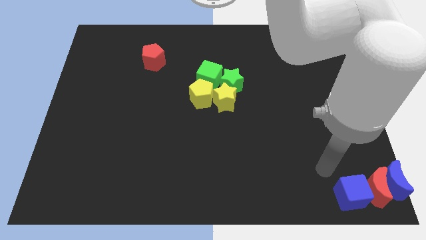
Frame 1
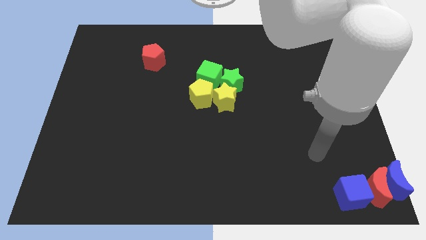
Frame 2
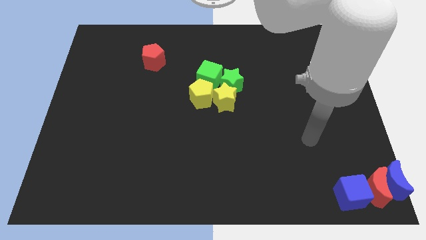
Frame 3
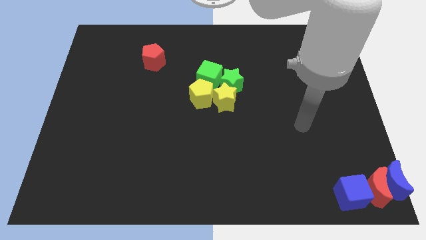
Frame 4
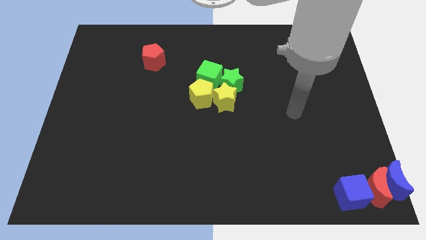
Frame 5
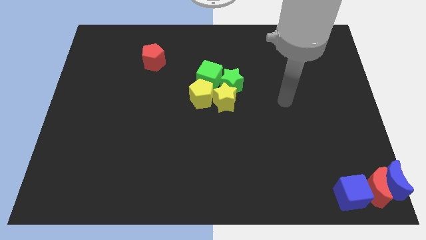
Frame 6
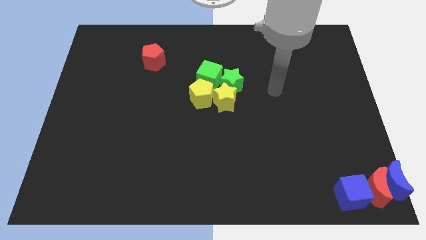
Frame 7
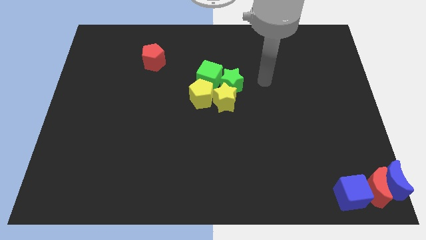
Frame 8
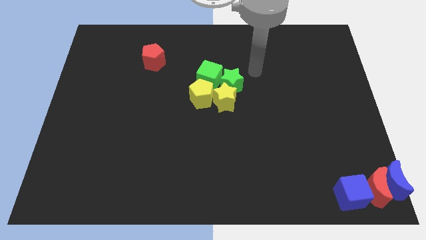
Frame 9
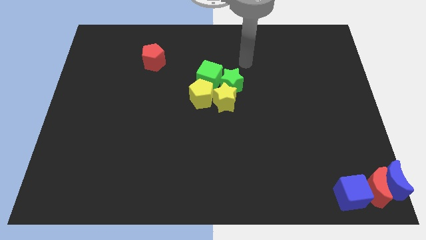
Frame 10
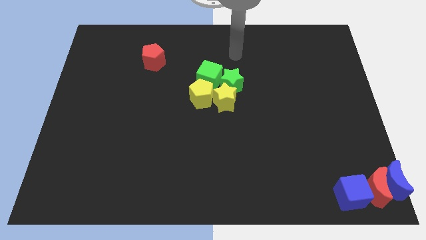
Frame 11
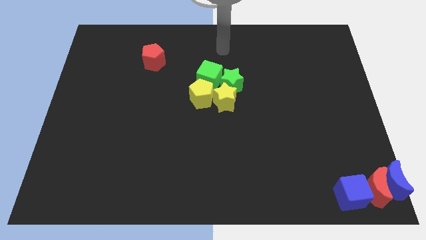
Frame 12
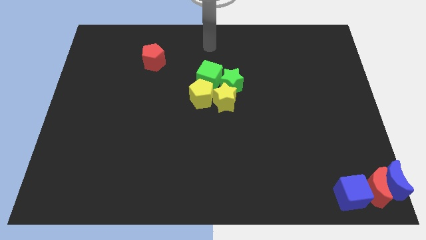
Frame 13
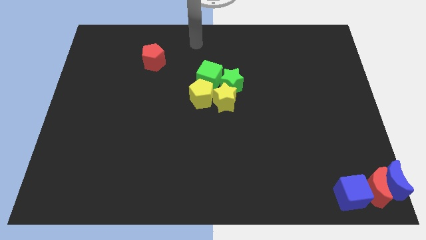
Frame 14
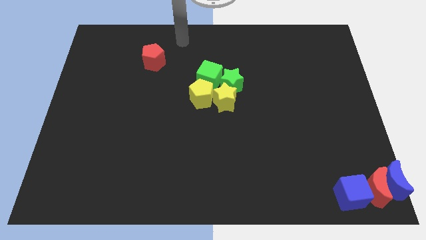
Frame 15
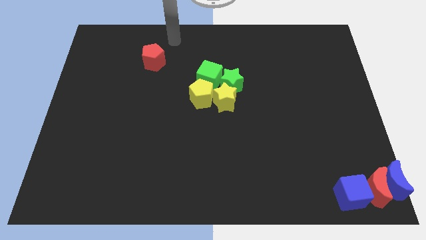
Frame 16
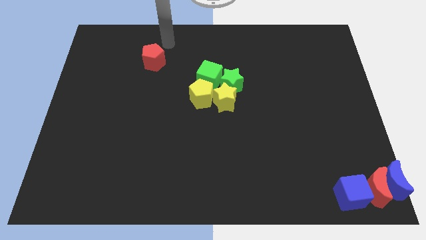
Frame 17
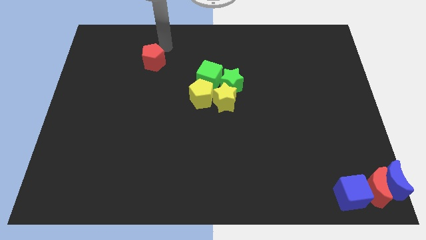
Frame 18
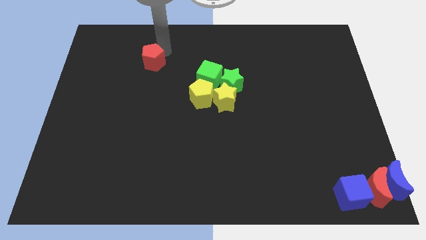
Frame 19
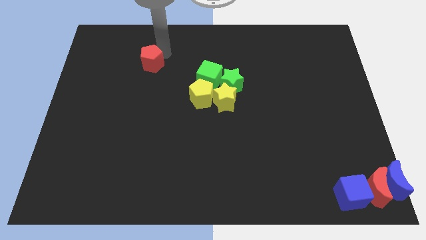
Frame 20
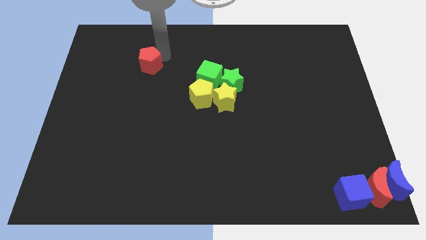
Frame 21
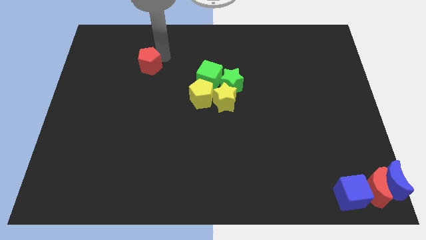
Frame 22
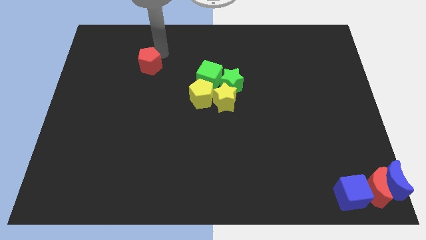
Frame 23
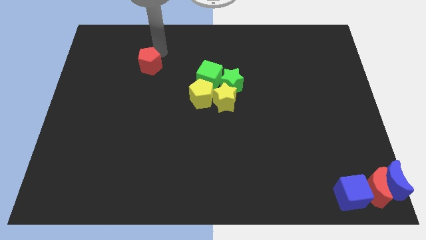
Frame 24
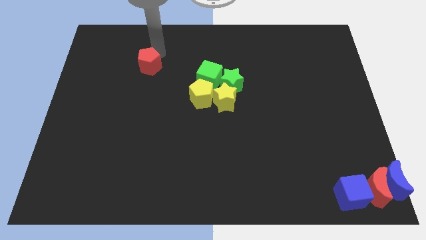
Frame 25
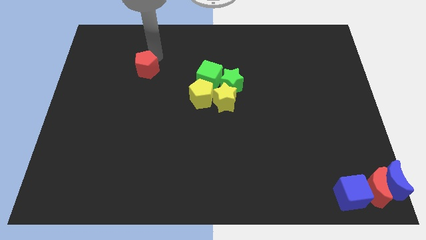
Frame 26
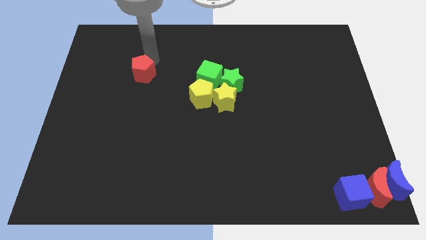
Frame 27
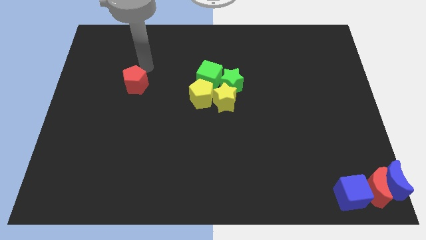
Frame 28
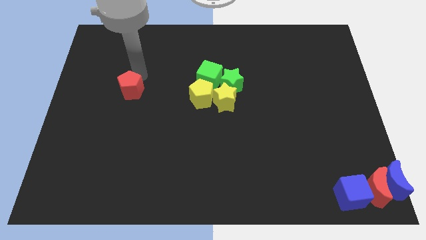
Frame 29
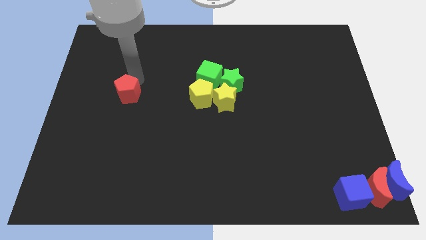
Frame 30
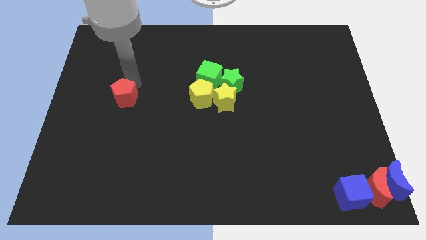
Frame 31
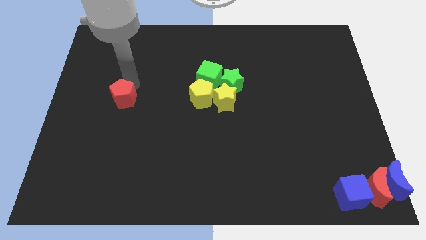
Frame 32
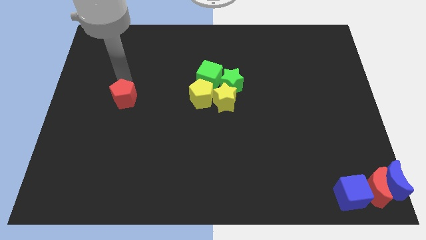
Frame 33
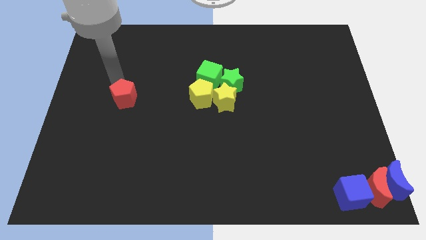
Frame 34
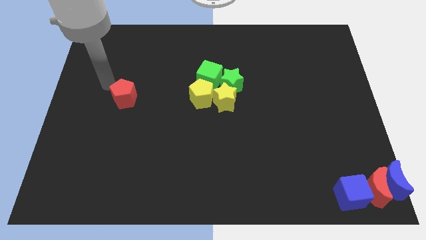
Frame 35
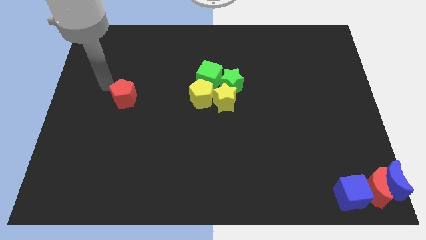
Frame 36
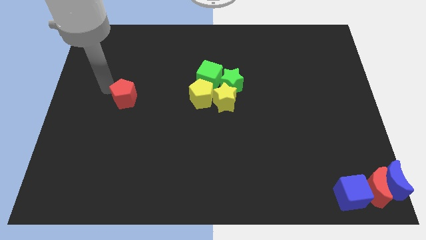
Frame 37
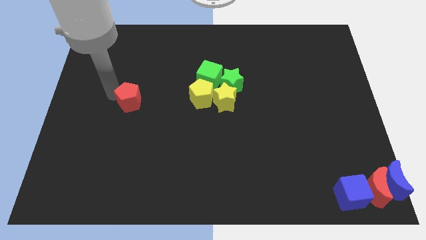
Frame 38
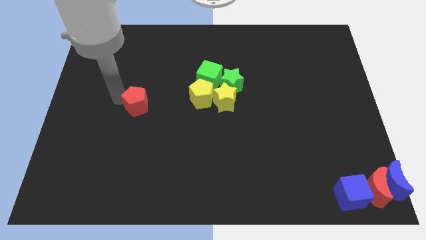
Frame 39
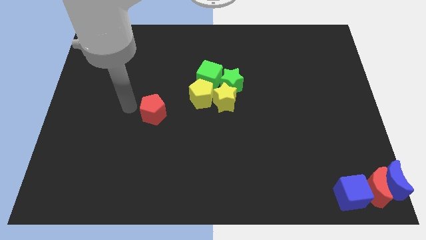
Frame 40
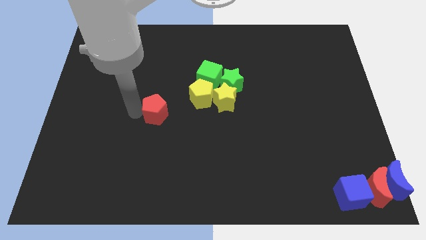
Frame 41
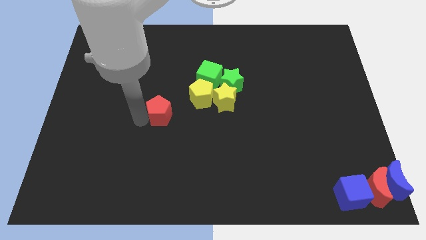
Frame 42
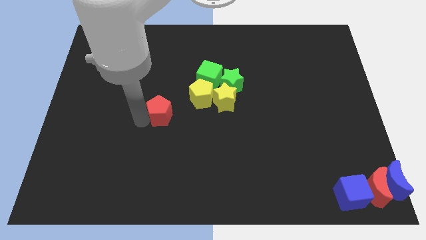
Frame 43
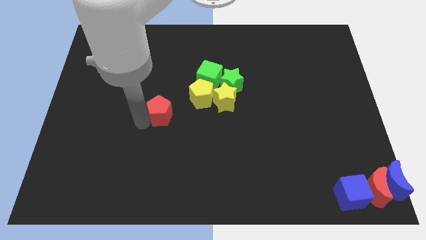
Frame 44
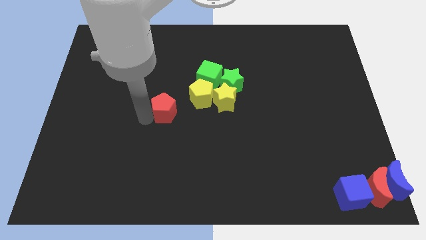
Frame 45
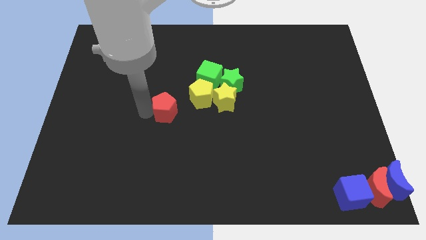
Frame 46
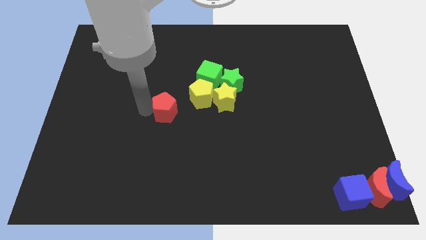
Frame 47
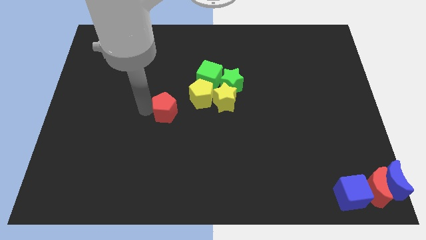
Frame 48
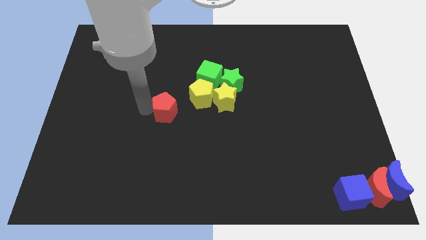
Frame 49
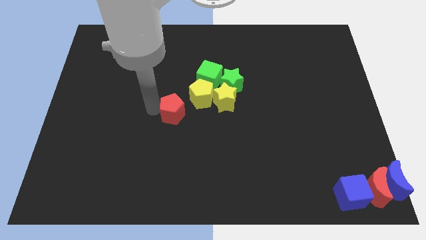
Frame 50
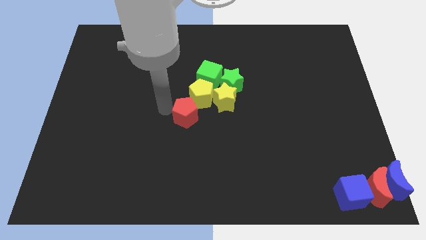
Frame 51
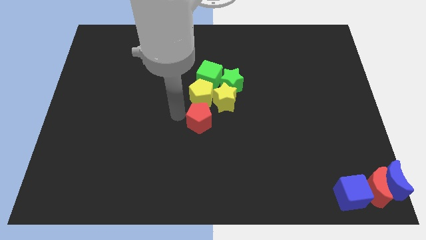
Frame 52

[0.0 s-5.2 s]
move the red pentagon towards the bottom side of the yellow pentagon

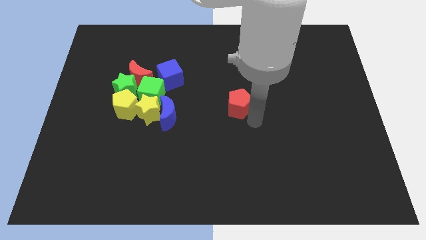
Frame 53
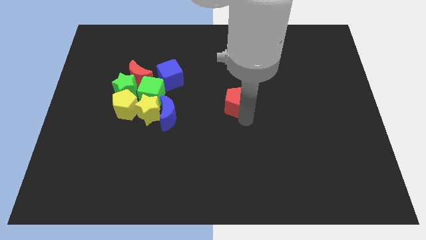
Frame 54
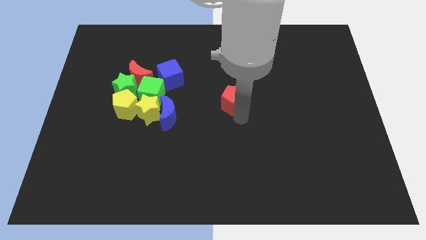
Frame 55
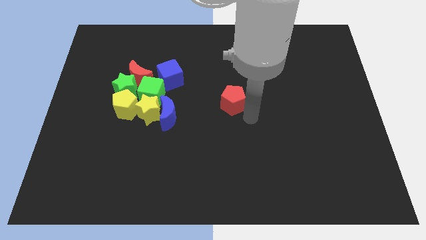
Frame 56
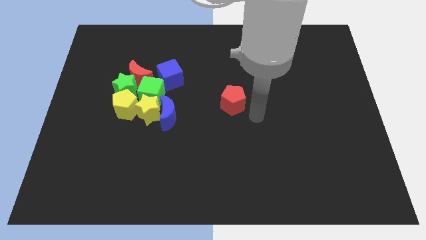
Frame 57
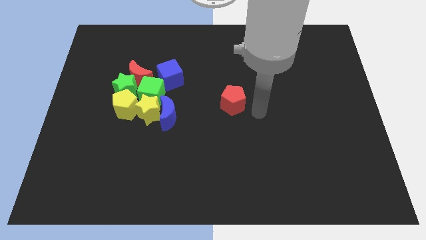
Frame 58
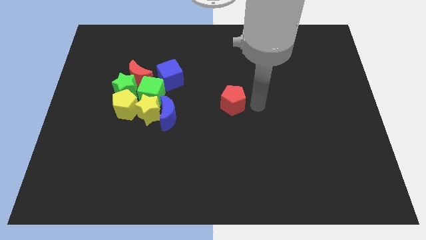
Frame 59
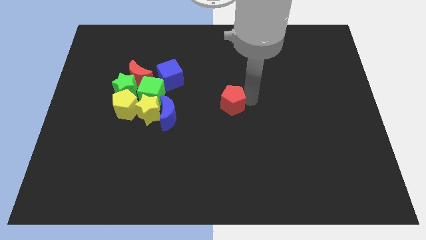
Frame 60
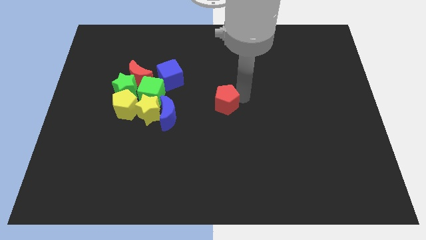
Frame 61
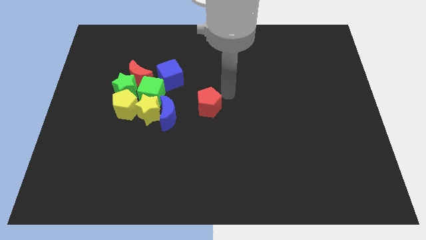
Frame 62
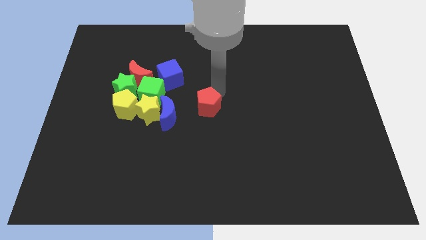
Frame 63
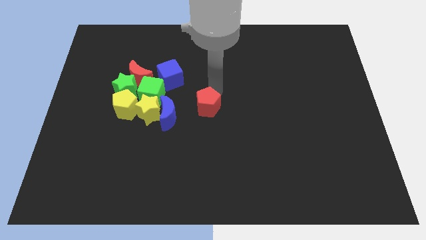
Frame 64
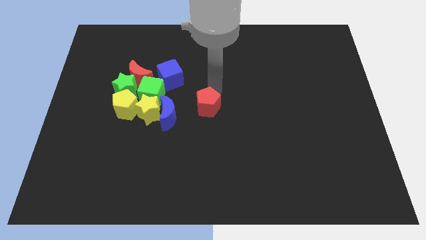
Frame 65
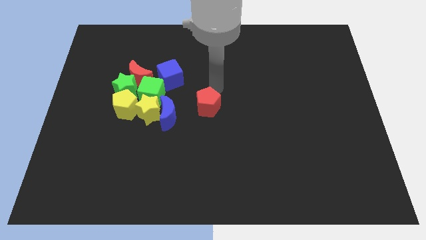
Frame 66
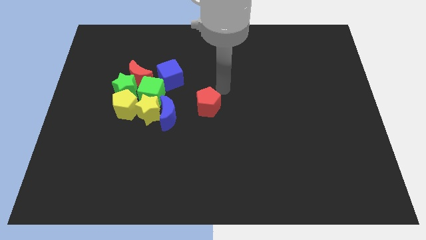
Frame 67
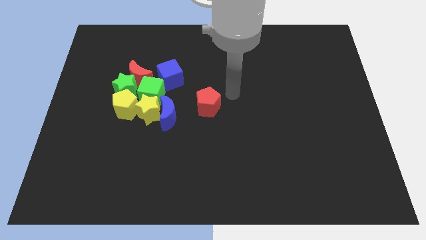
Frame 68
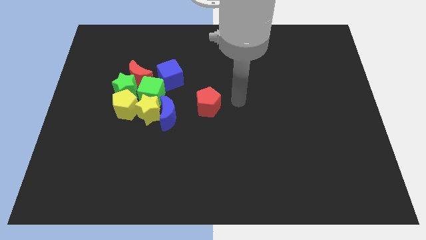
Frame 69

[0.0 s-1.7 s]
push red pentagon to the center of the board

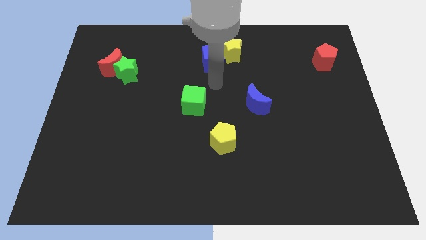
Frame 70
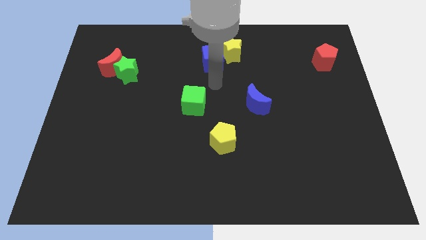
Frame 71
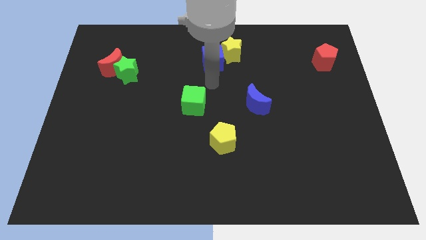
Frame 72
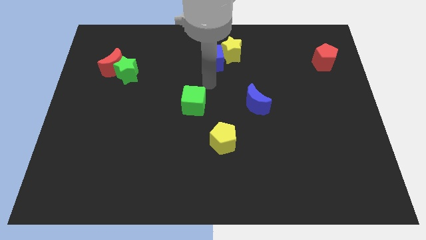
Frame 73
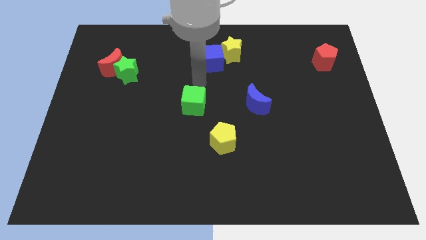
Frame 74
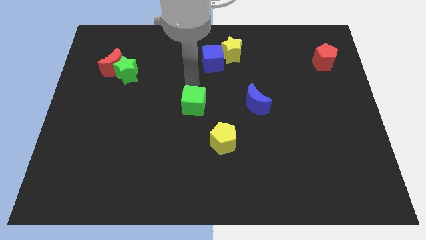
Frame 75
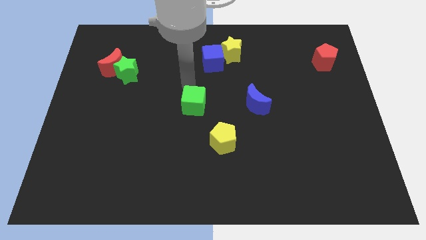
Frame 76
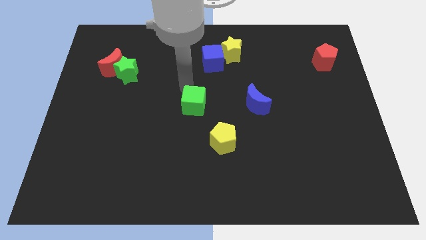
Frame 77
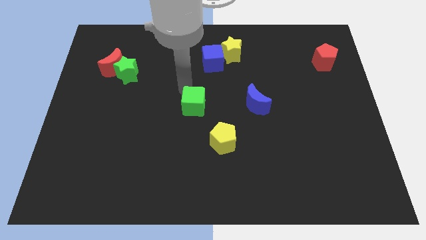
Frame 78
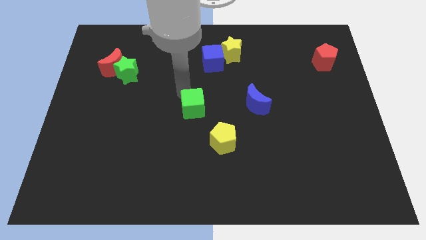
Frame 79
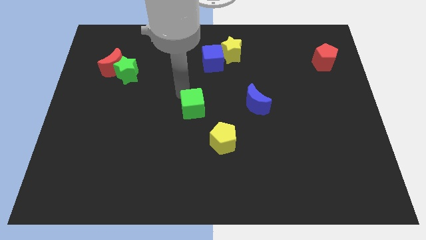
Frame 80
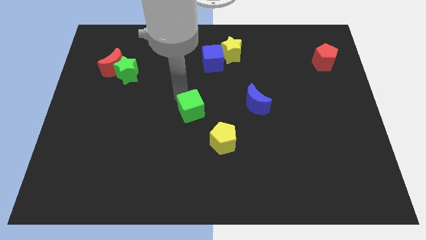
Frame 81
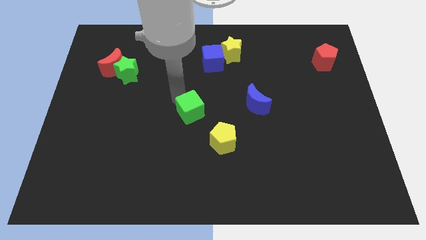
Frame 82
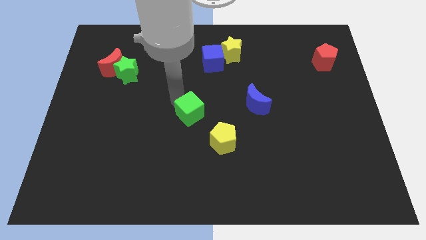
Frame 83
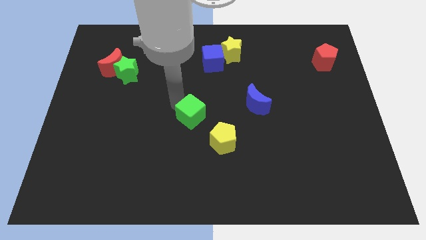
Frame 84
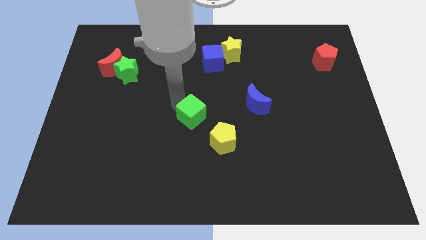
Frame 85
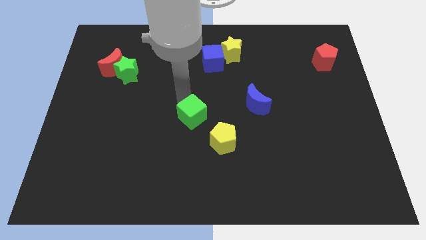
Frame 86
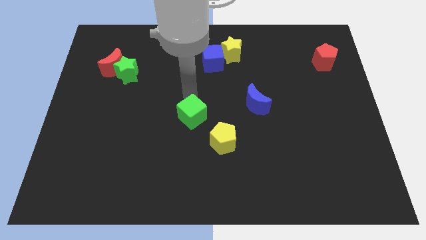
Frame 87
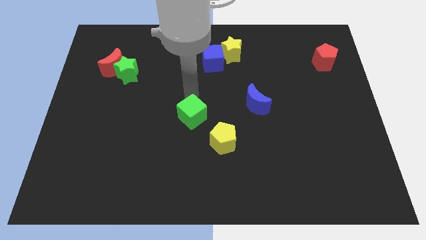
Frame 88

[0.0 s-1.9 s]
push the green cube slightly to the bottom

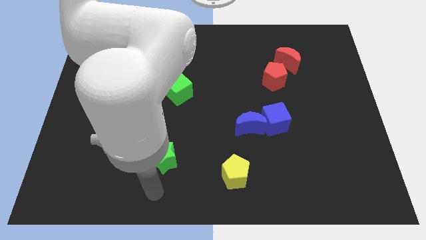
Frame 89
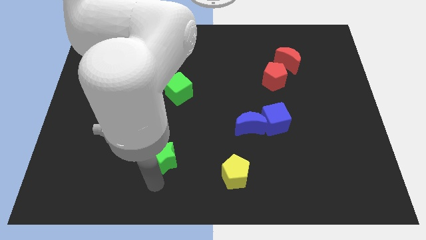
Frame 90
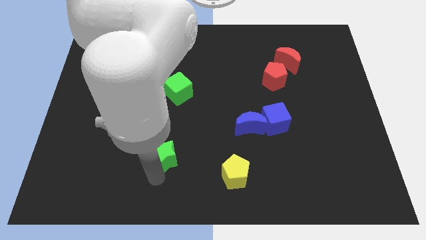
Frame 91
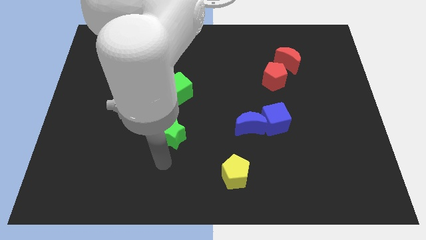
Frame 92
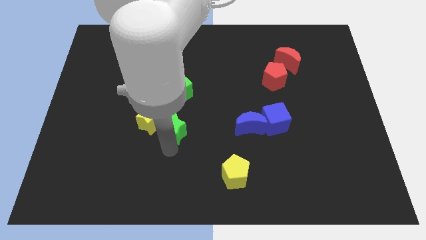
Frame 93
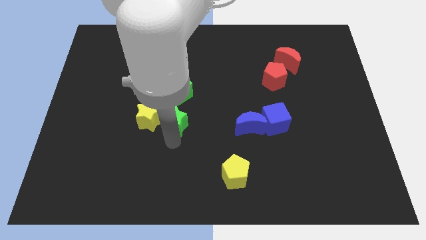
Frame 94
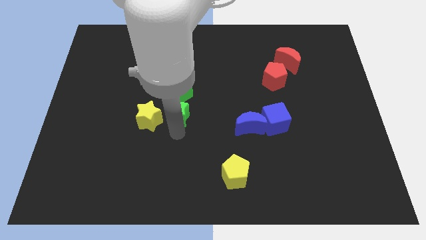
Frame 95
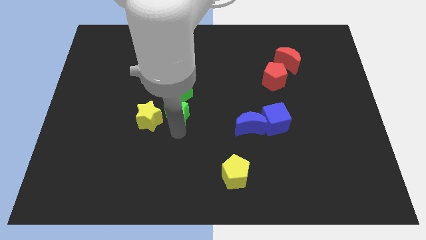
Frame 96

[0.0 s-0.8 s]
place green star beside yellow star
